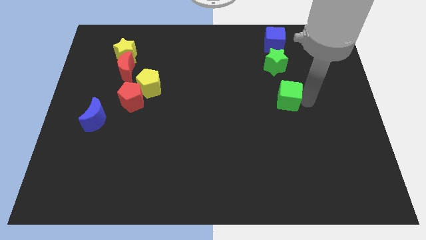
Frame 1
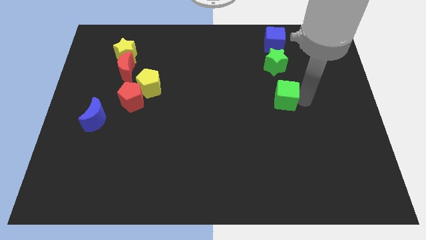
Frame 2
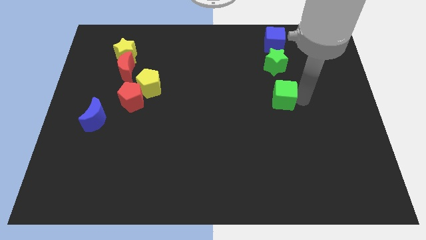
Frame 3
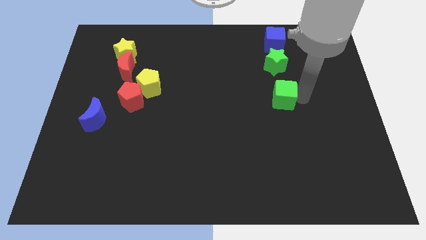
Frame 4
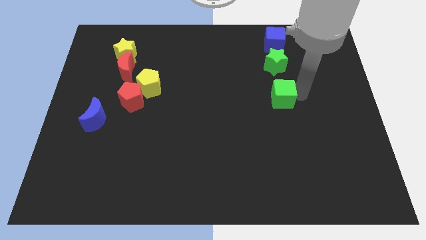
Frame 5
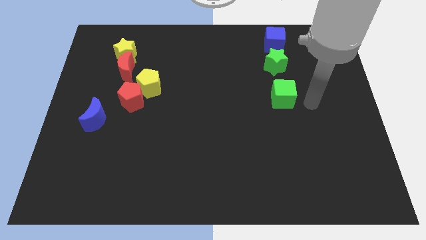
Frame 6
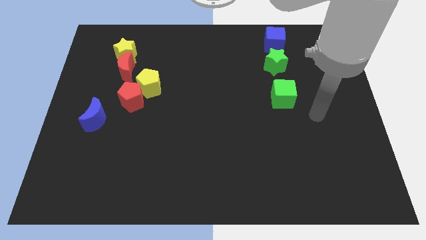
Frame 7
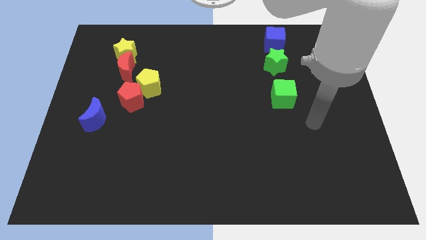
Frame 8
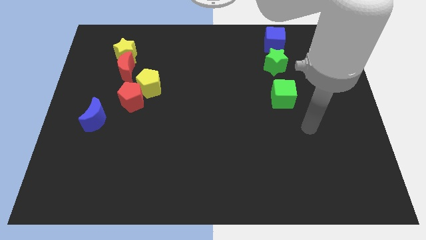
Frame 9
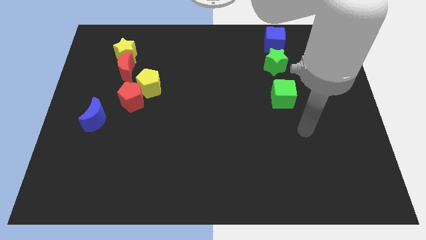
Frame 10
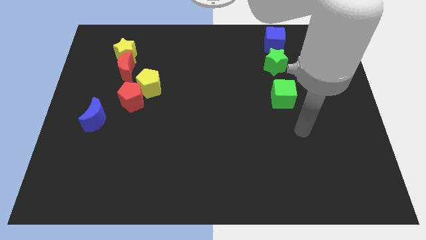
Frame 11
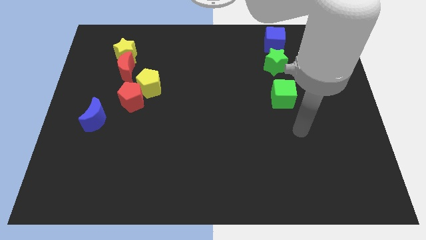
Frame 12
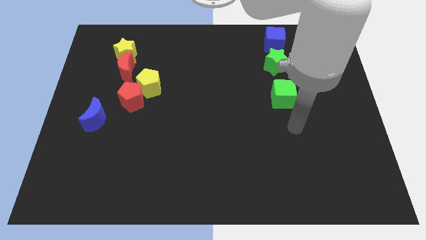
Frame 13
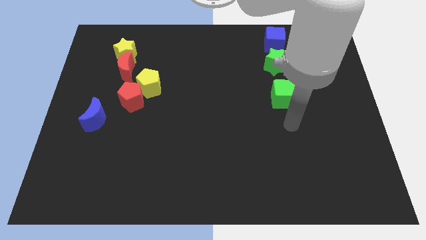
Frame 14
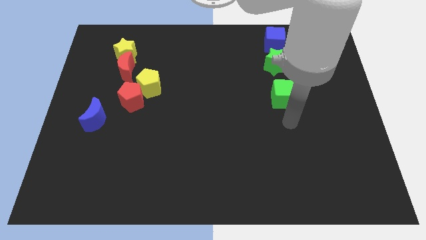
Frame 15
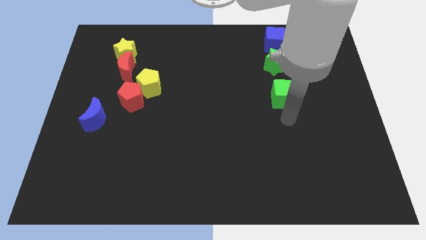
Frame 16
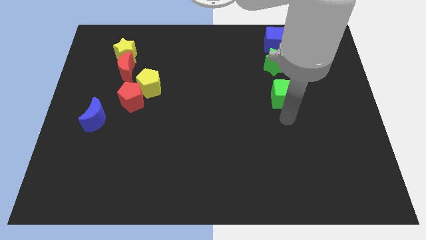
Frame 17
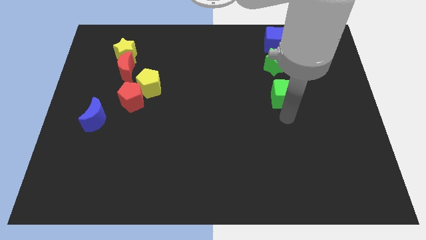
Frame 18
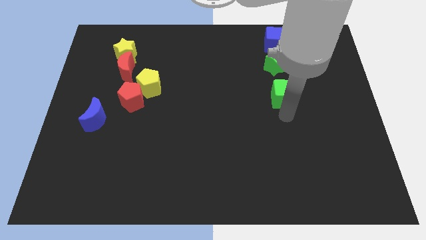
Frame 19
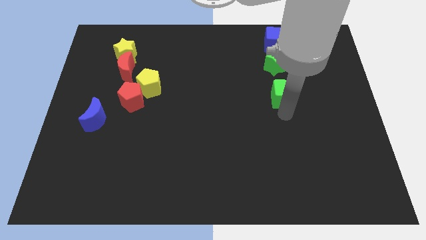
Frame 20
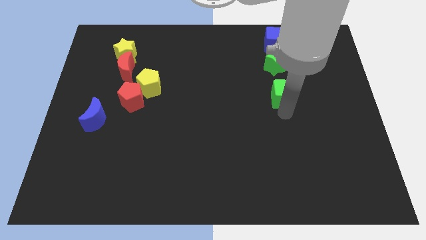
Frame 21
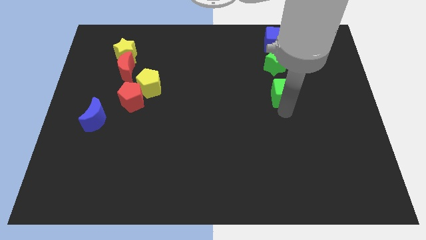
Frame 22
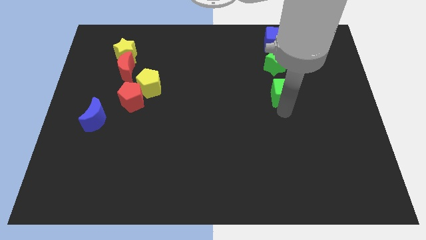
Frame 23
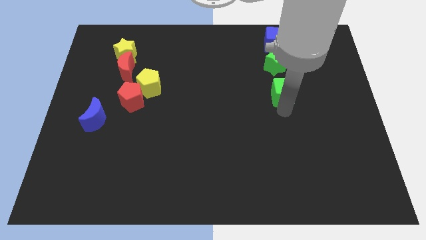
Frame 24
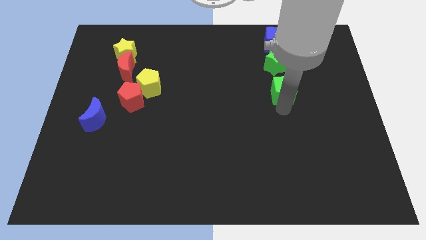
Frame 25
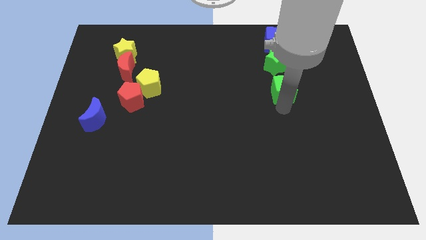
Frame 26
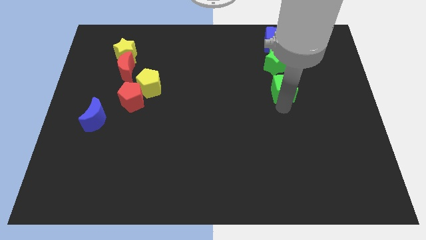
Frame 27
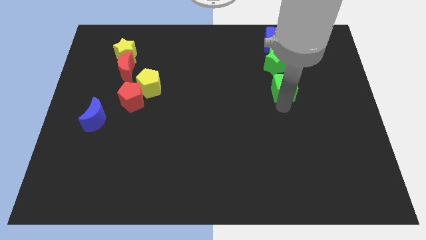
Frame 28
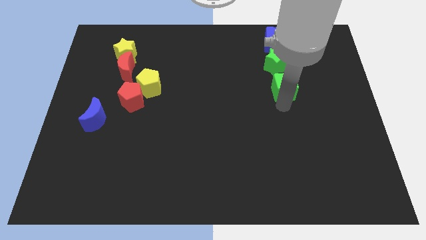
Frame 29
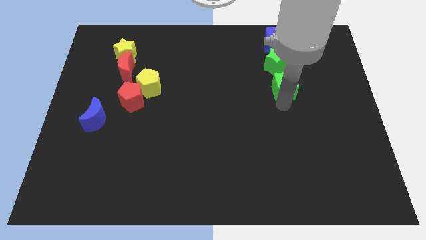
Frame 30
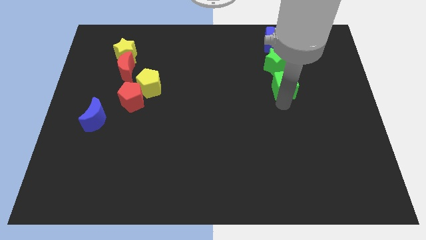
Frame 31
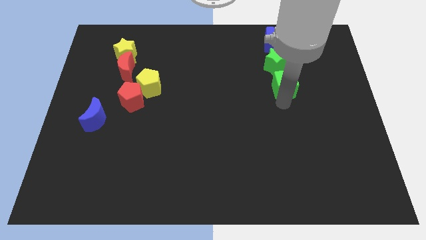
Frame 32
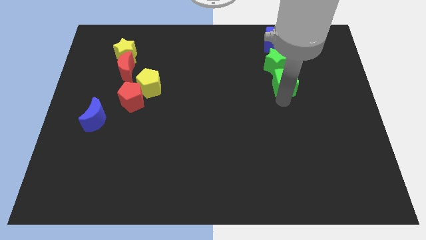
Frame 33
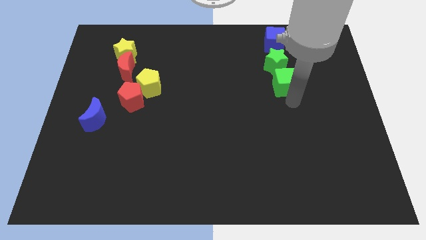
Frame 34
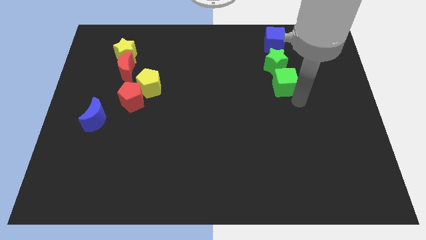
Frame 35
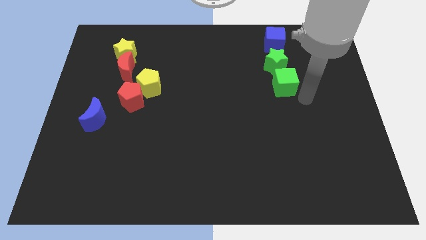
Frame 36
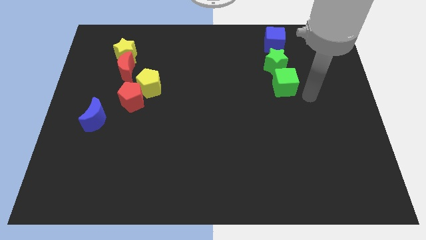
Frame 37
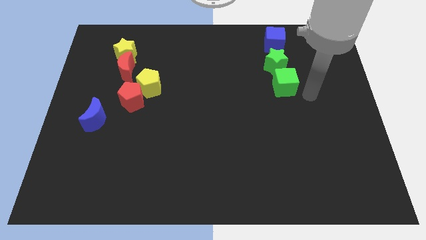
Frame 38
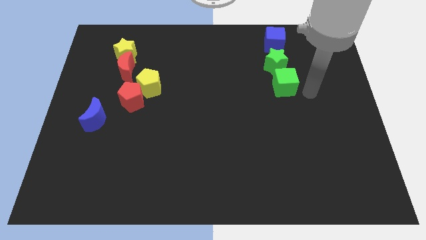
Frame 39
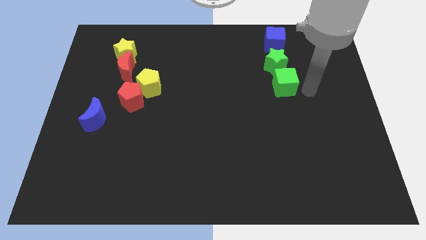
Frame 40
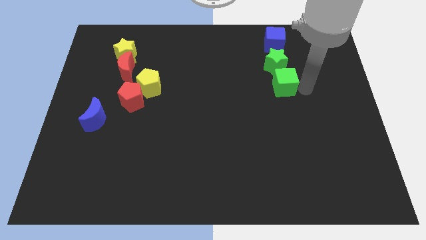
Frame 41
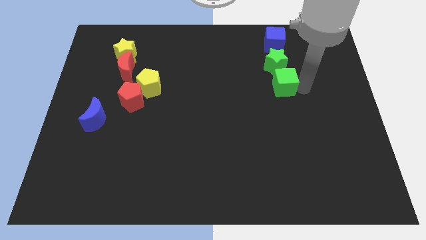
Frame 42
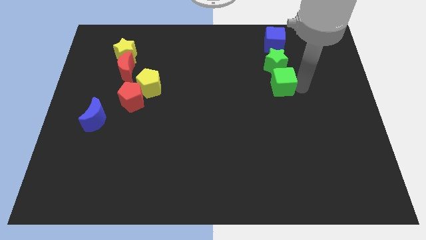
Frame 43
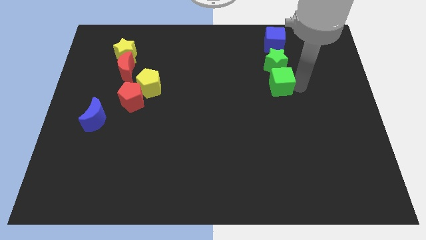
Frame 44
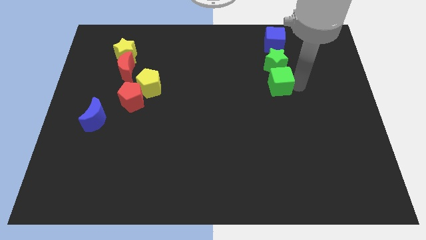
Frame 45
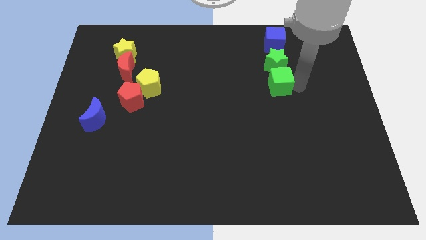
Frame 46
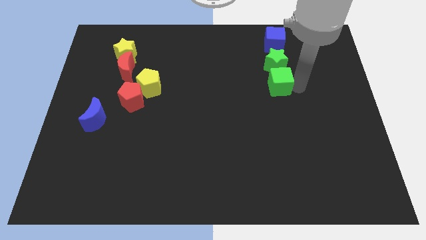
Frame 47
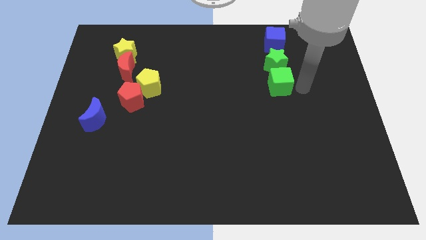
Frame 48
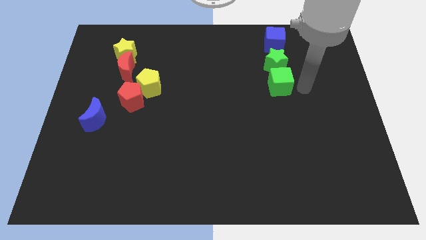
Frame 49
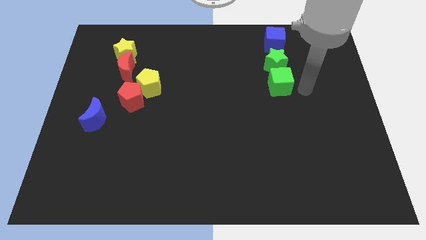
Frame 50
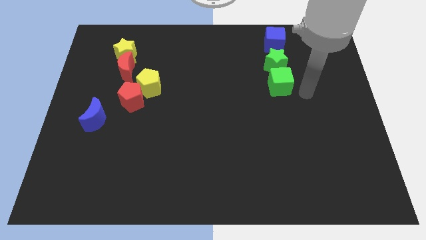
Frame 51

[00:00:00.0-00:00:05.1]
slide green cube close to green star

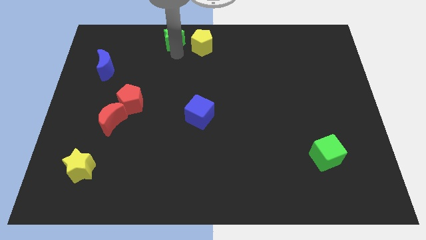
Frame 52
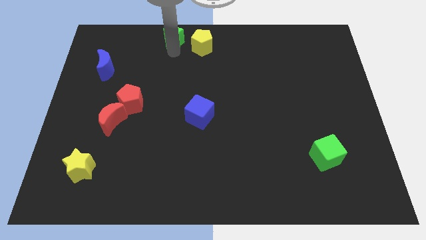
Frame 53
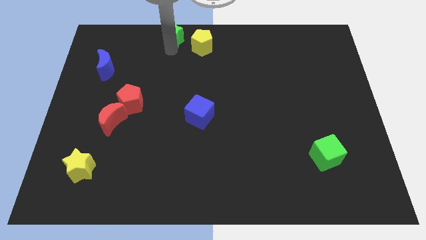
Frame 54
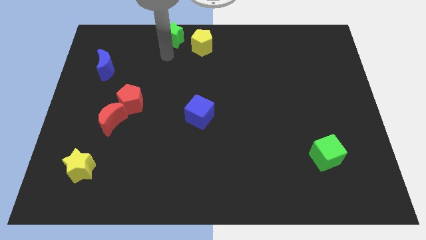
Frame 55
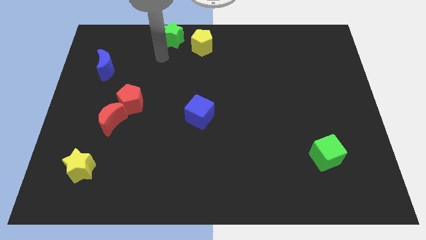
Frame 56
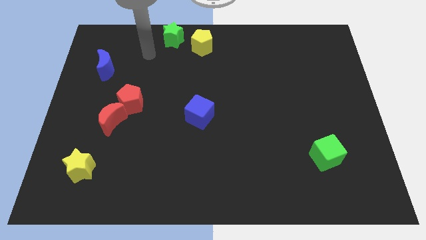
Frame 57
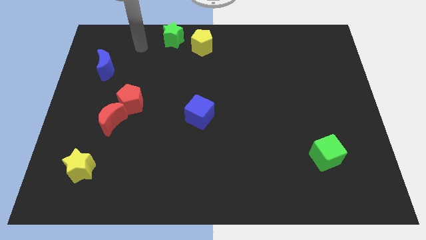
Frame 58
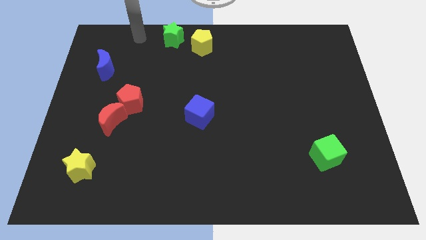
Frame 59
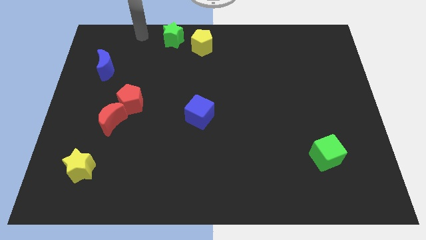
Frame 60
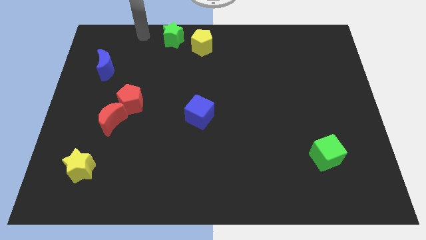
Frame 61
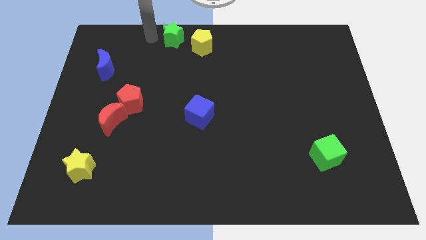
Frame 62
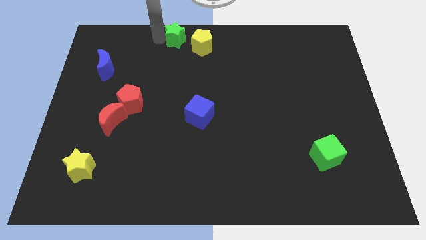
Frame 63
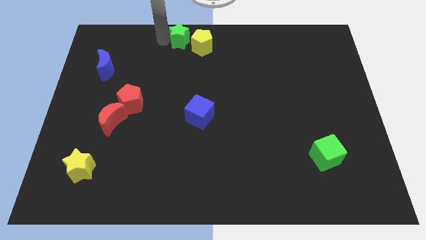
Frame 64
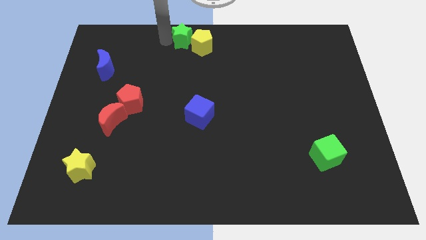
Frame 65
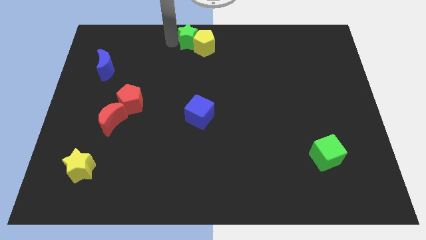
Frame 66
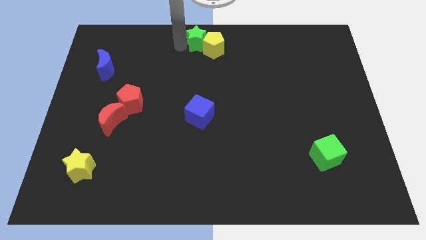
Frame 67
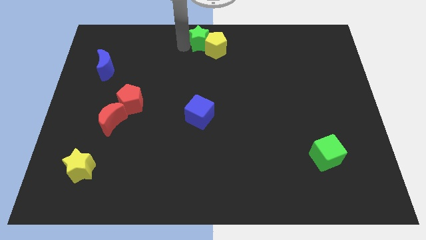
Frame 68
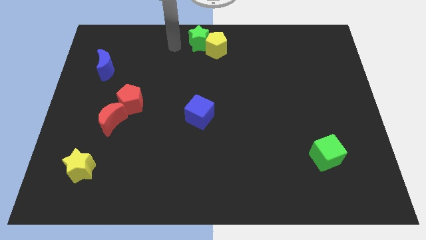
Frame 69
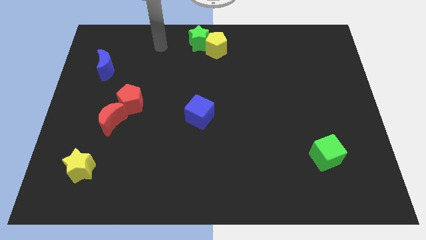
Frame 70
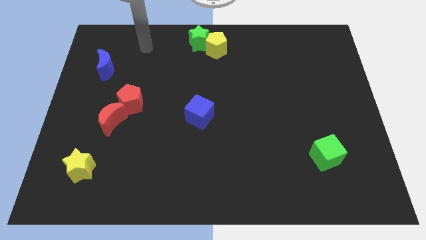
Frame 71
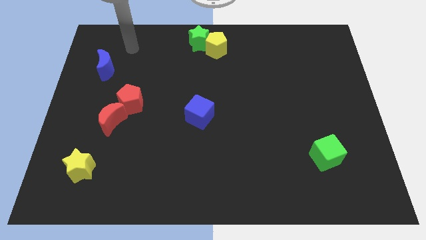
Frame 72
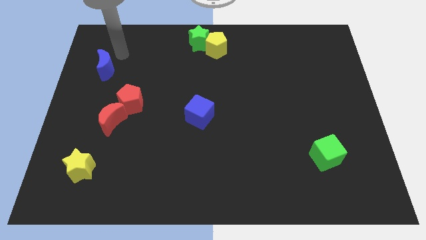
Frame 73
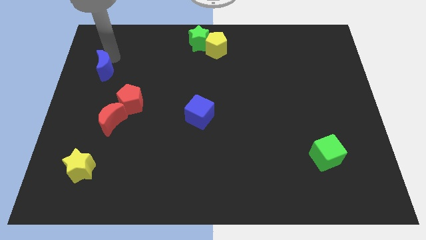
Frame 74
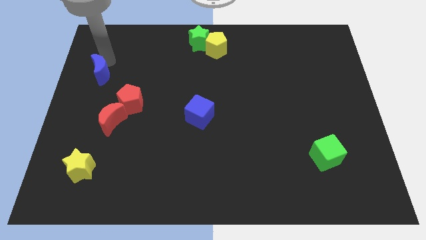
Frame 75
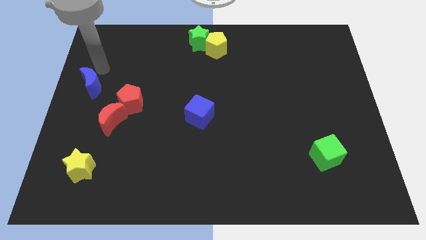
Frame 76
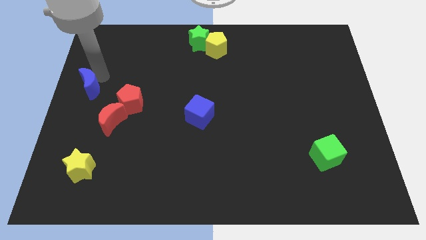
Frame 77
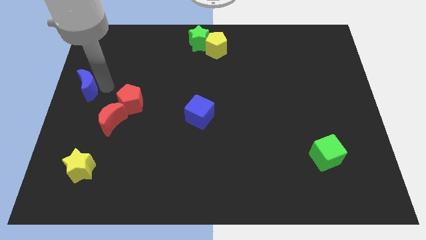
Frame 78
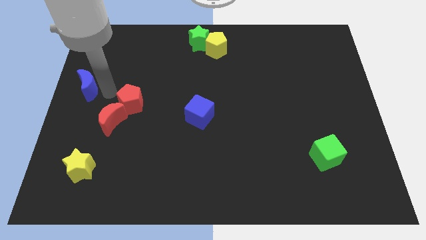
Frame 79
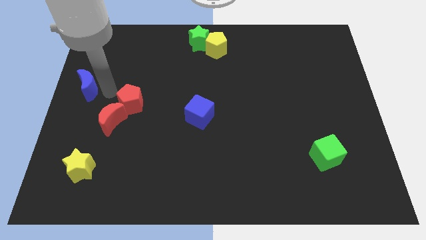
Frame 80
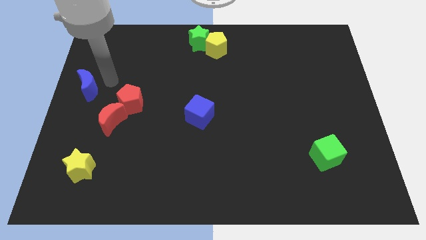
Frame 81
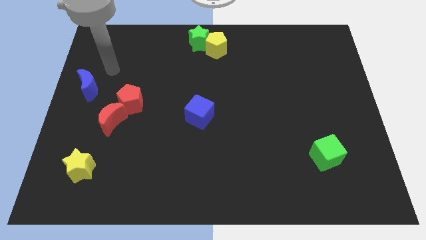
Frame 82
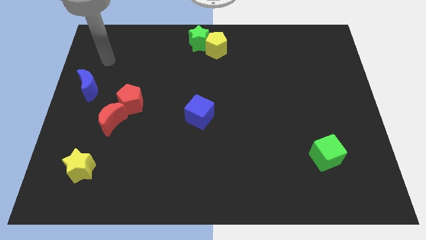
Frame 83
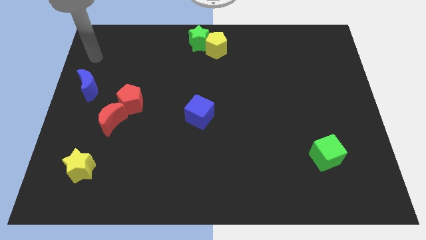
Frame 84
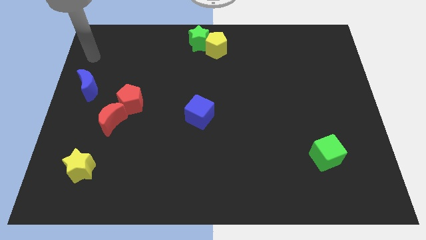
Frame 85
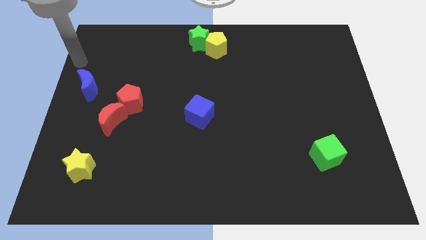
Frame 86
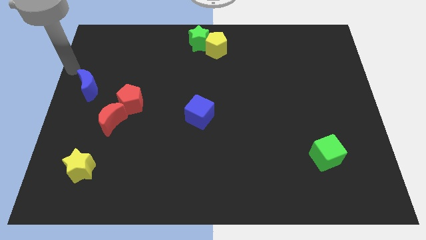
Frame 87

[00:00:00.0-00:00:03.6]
push the green star into the yellow pentagon

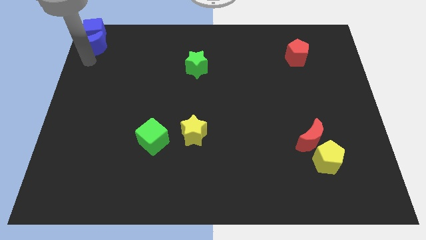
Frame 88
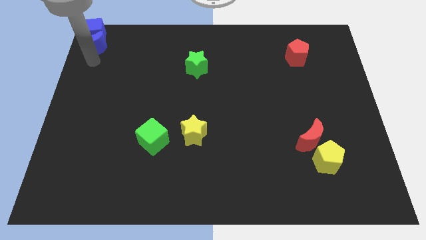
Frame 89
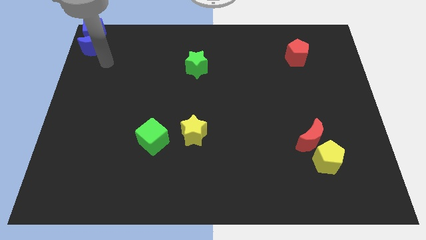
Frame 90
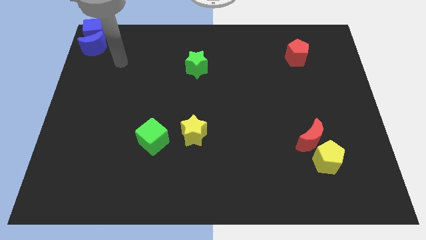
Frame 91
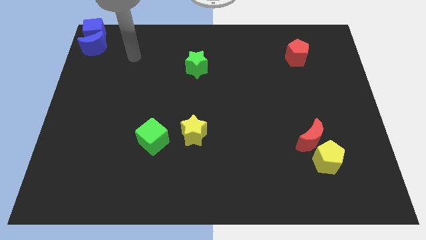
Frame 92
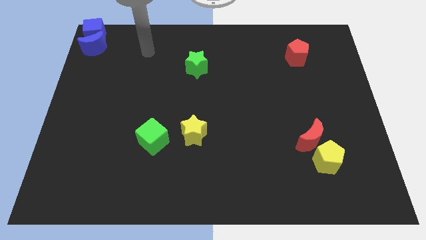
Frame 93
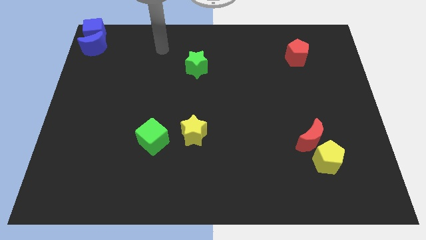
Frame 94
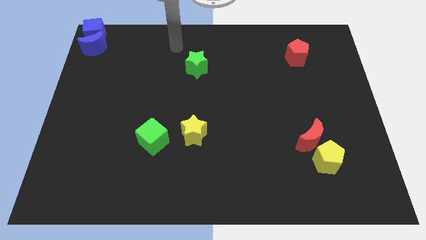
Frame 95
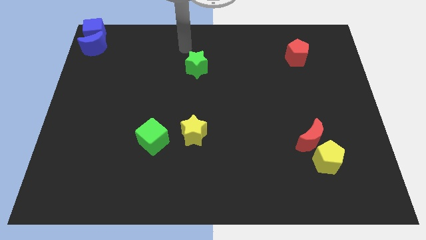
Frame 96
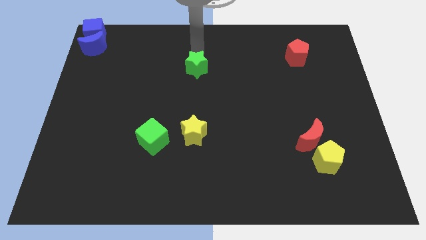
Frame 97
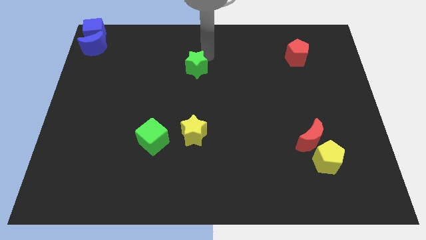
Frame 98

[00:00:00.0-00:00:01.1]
point your arm at the top of green star
